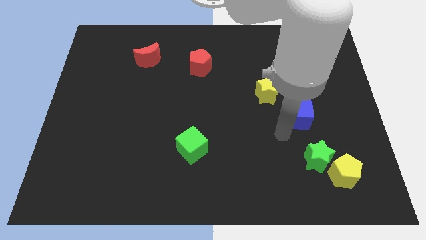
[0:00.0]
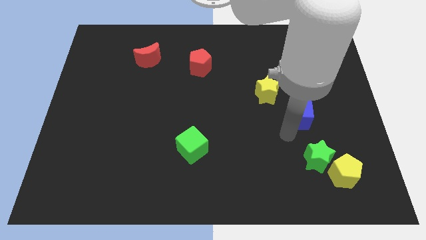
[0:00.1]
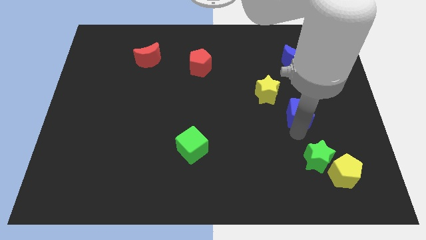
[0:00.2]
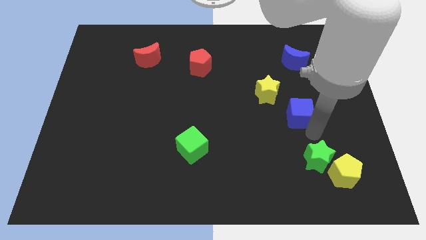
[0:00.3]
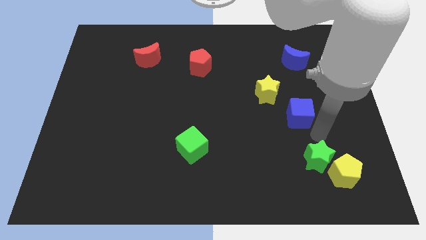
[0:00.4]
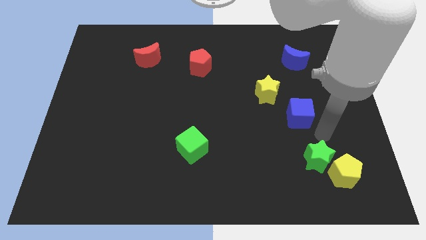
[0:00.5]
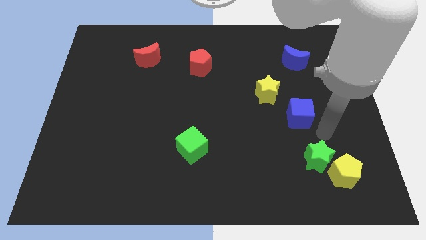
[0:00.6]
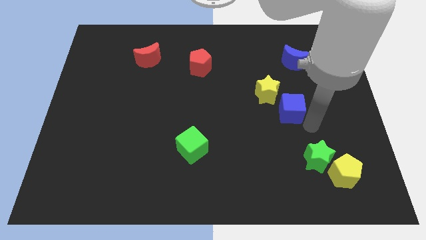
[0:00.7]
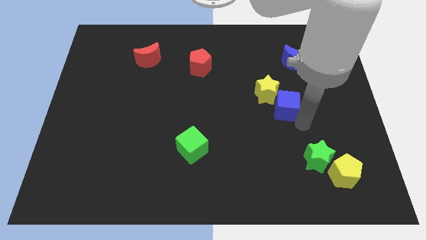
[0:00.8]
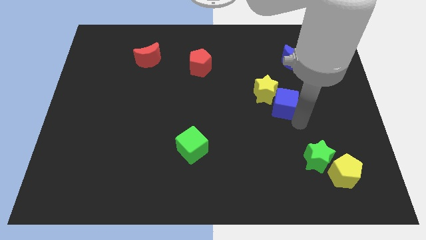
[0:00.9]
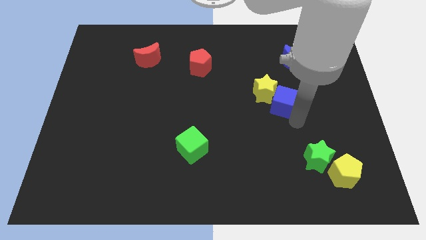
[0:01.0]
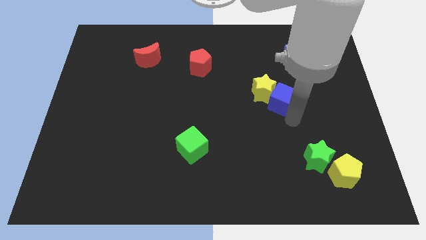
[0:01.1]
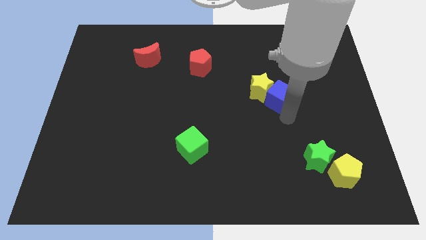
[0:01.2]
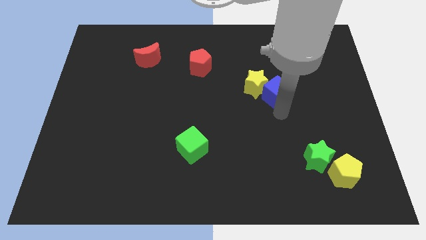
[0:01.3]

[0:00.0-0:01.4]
move blue cube into the yellow star towards up

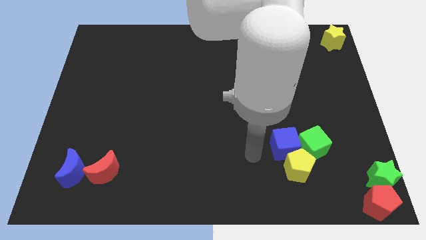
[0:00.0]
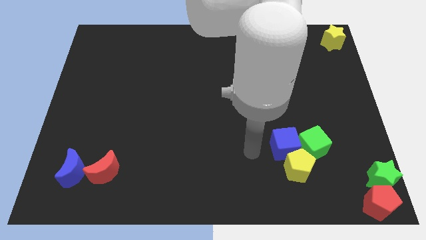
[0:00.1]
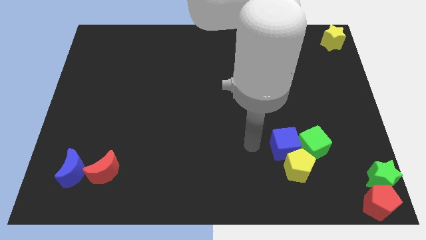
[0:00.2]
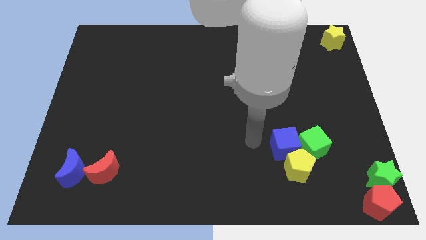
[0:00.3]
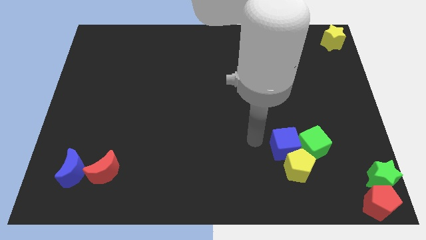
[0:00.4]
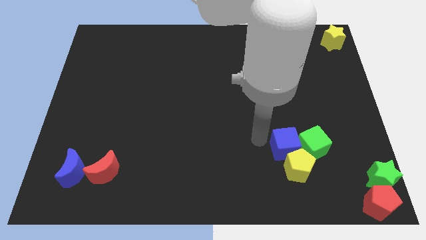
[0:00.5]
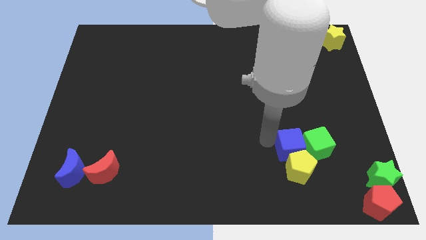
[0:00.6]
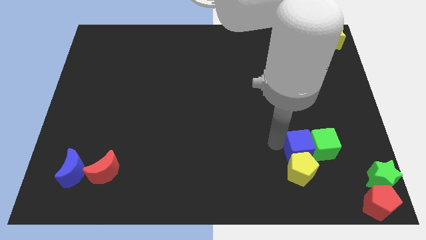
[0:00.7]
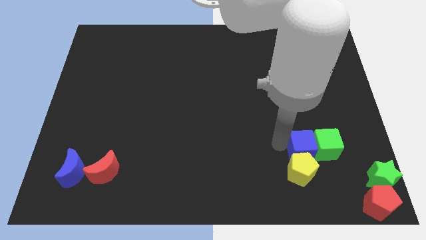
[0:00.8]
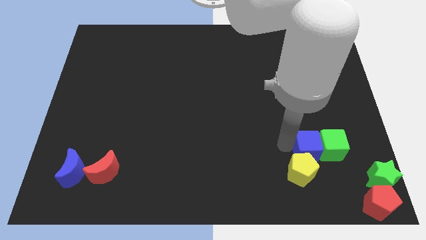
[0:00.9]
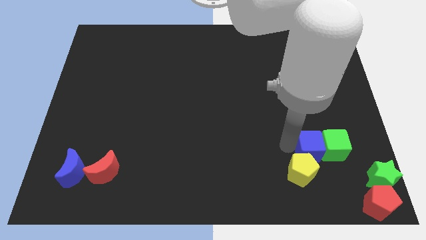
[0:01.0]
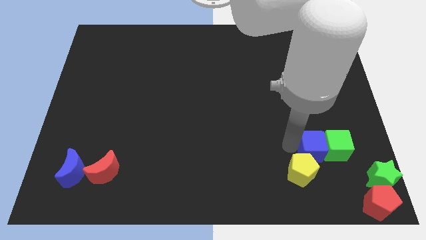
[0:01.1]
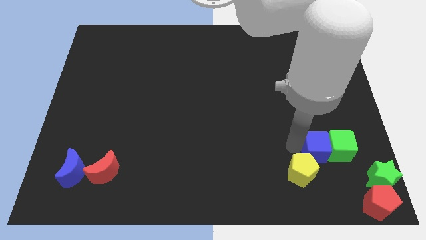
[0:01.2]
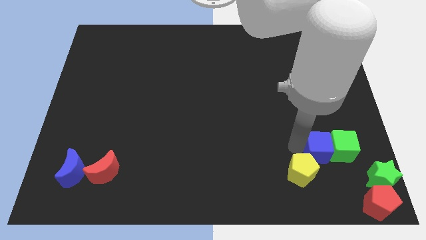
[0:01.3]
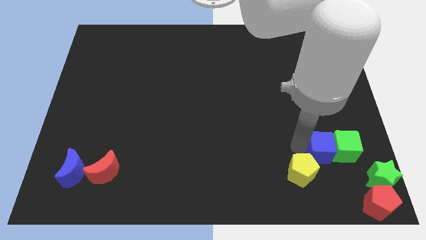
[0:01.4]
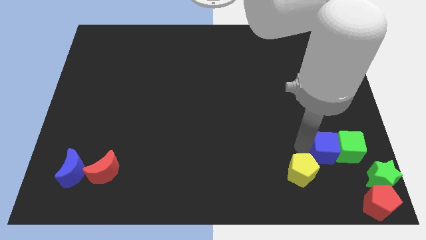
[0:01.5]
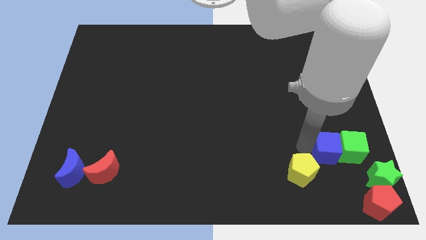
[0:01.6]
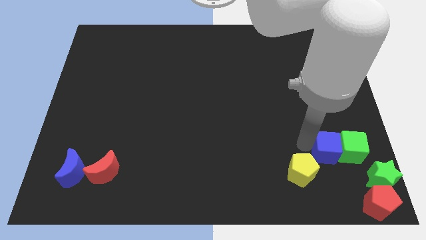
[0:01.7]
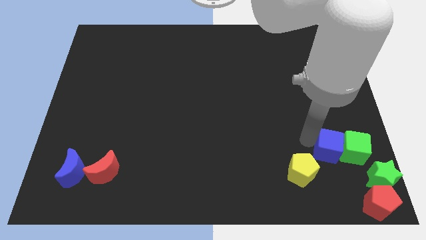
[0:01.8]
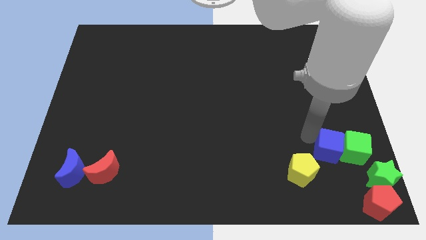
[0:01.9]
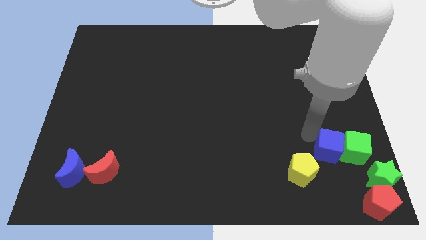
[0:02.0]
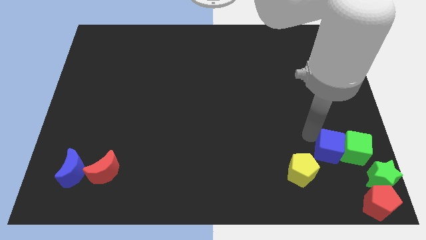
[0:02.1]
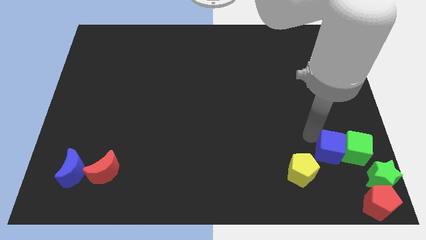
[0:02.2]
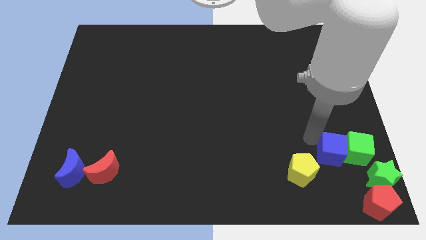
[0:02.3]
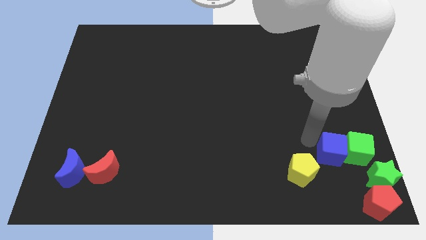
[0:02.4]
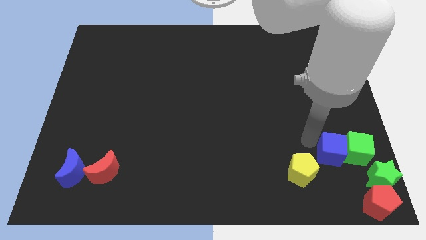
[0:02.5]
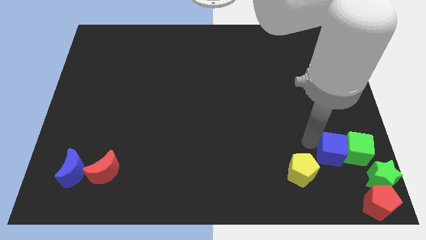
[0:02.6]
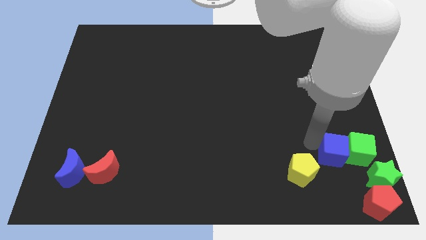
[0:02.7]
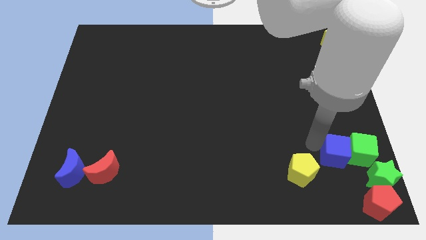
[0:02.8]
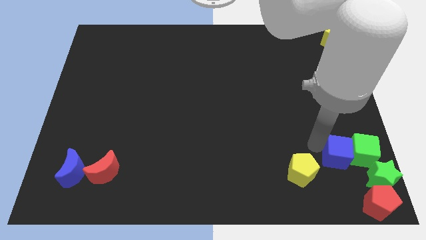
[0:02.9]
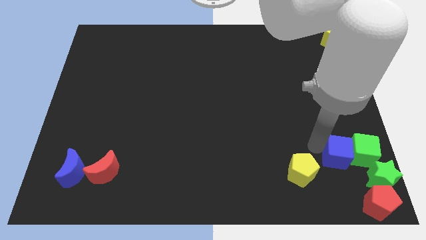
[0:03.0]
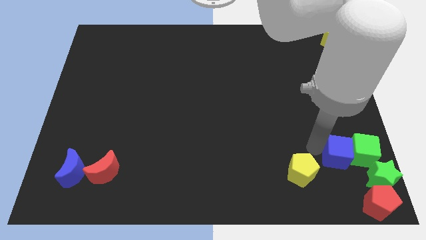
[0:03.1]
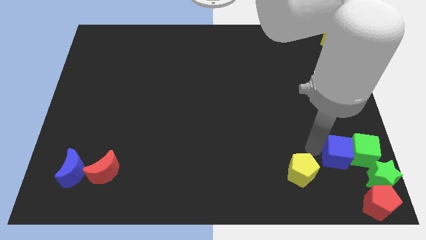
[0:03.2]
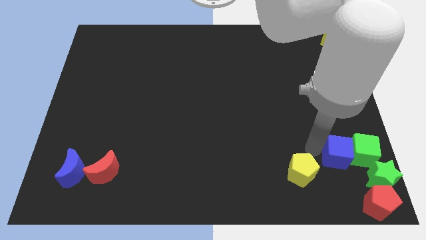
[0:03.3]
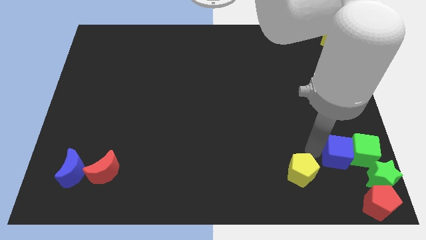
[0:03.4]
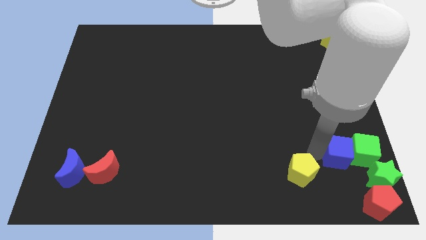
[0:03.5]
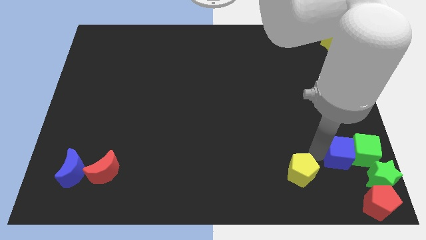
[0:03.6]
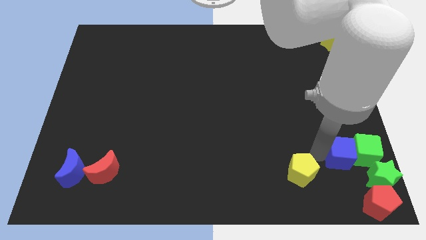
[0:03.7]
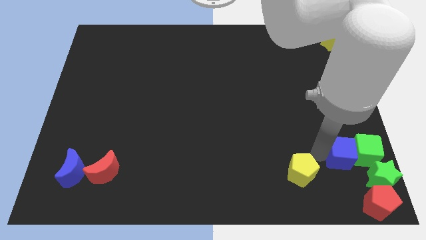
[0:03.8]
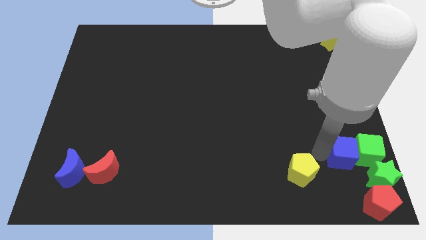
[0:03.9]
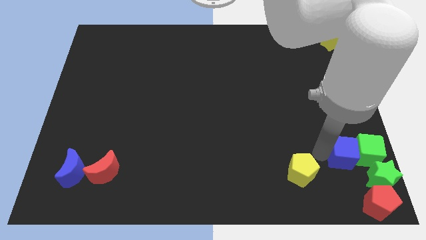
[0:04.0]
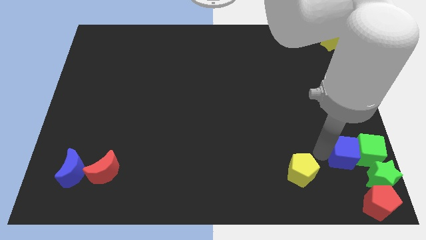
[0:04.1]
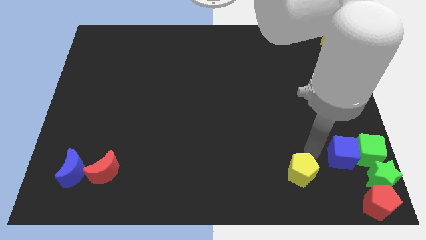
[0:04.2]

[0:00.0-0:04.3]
push the cubes above green star at the right bottom

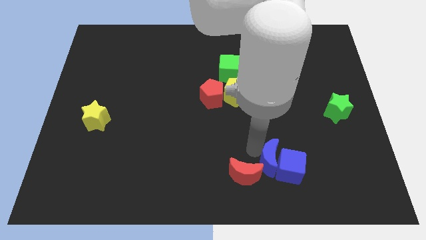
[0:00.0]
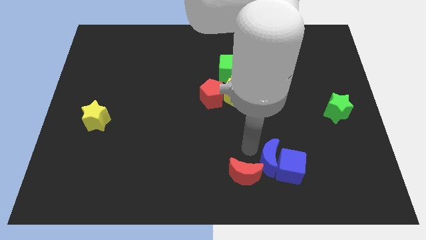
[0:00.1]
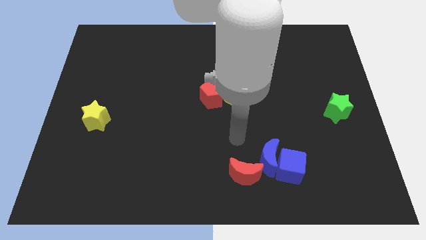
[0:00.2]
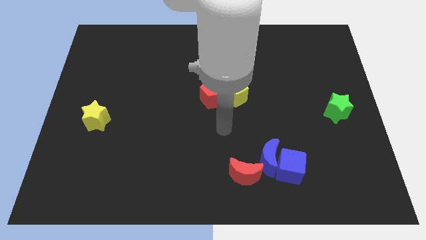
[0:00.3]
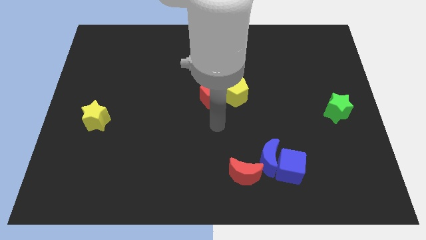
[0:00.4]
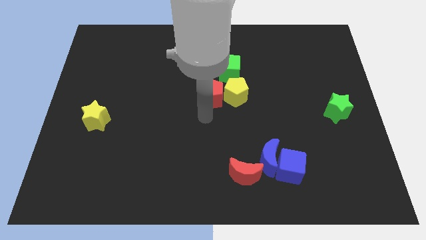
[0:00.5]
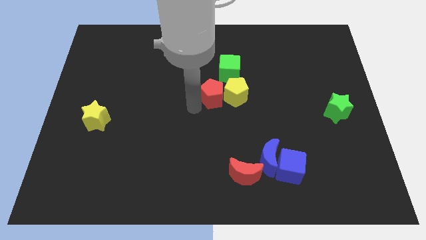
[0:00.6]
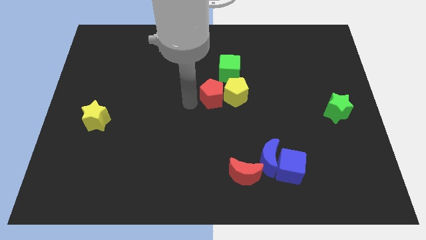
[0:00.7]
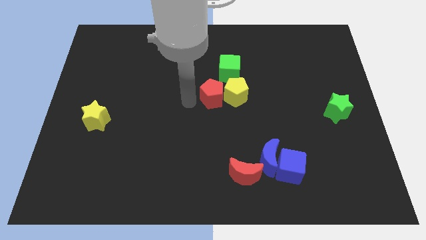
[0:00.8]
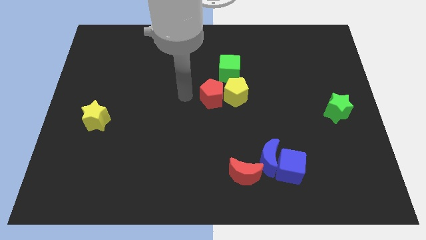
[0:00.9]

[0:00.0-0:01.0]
point your arm at the left of the red pentagon

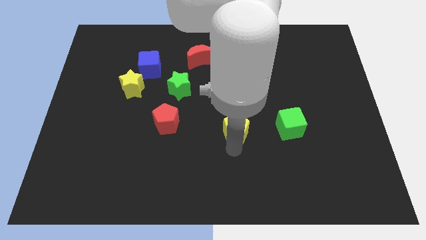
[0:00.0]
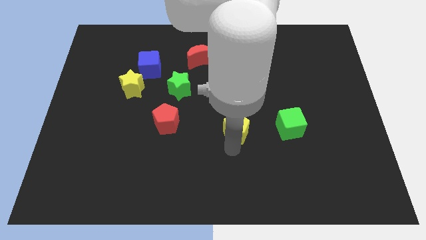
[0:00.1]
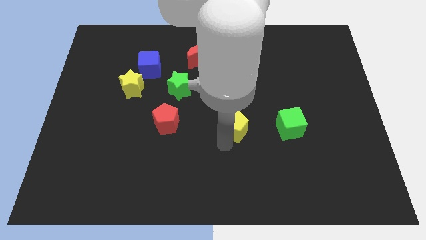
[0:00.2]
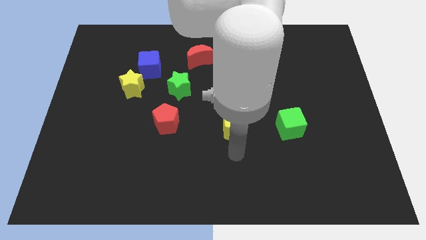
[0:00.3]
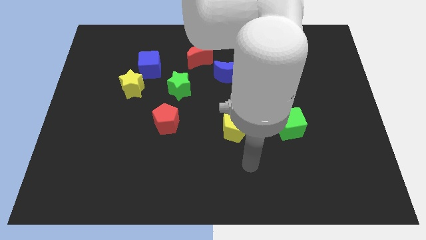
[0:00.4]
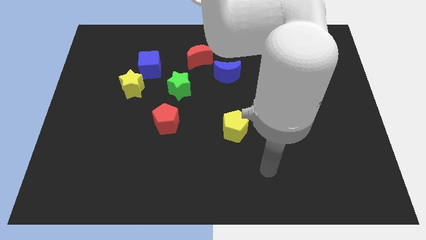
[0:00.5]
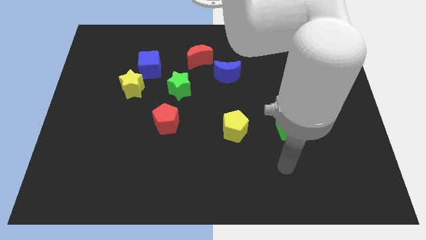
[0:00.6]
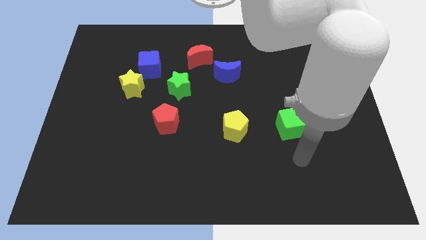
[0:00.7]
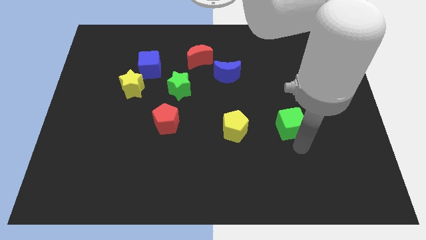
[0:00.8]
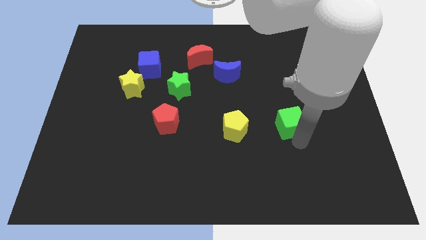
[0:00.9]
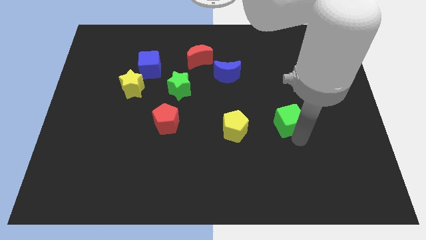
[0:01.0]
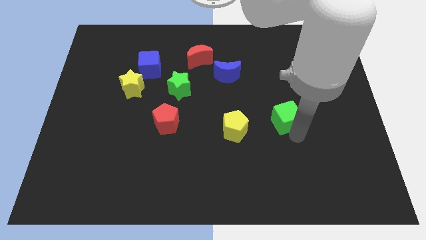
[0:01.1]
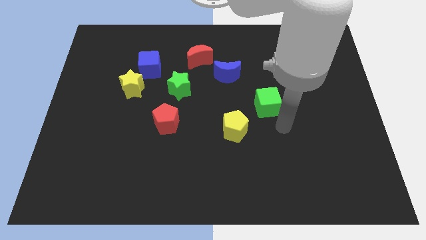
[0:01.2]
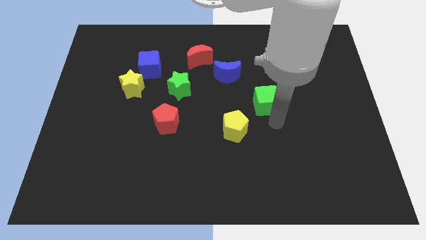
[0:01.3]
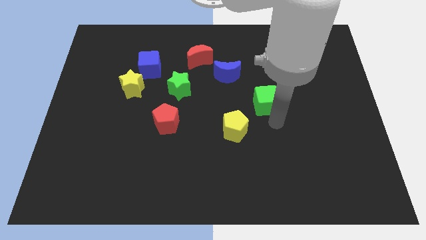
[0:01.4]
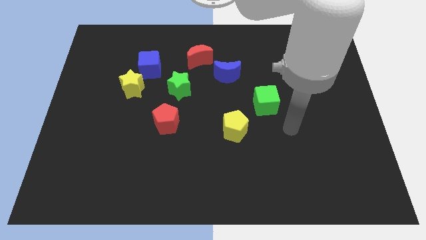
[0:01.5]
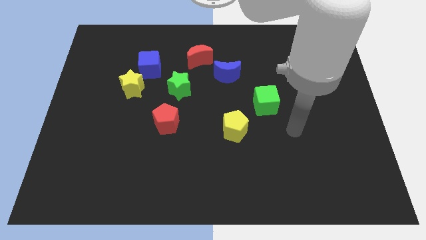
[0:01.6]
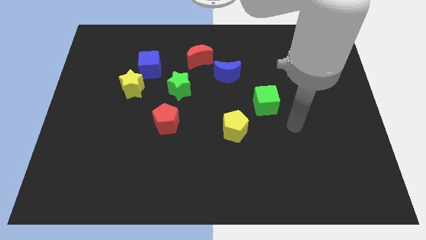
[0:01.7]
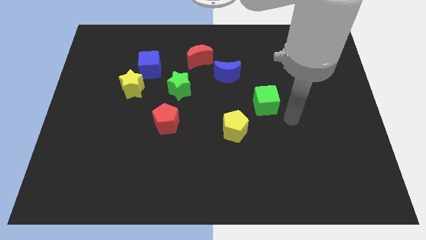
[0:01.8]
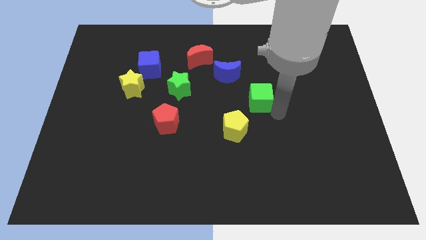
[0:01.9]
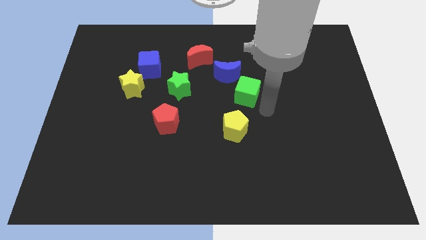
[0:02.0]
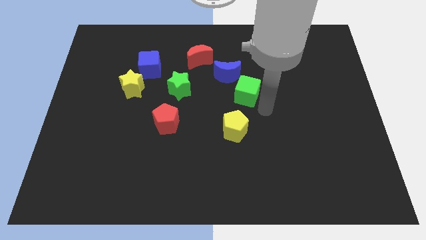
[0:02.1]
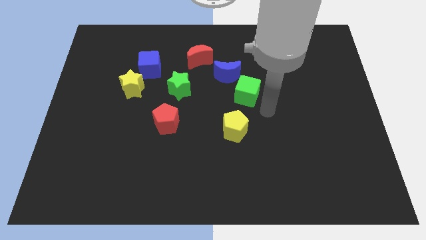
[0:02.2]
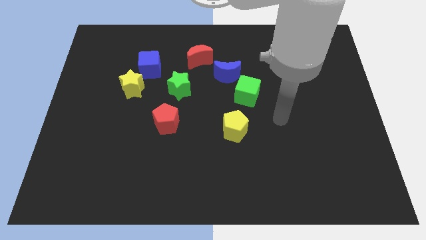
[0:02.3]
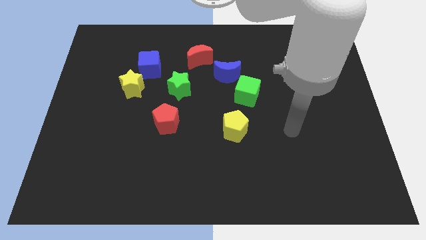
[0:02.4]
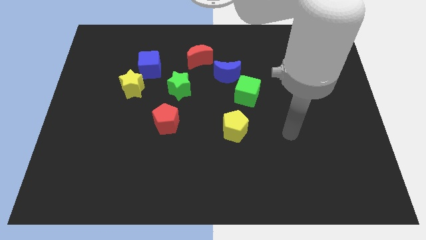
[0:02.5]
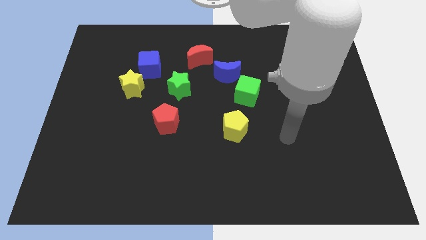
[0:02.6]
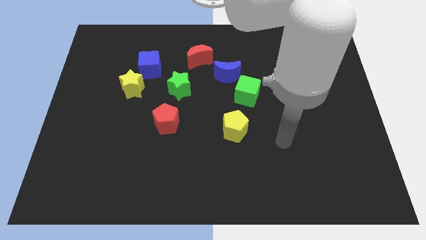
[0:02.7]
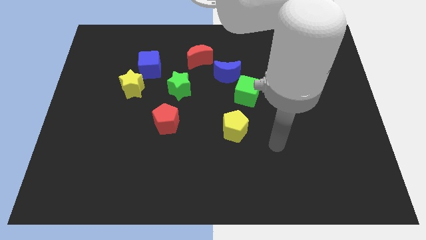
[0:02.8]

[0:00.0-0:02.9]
move the green cube to the bottom right of the blue crescent
